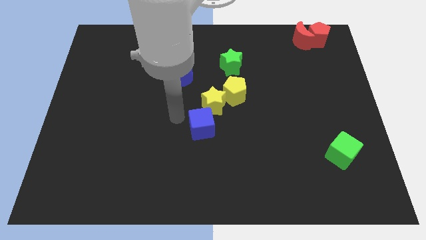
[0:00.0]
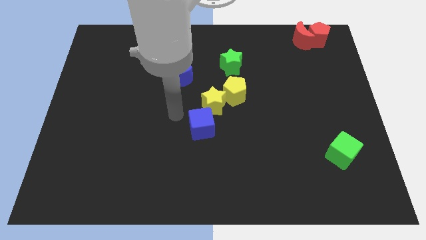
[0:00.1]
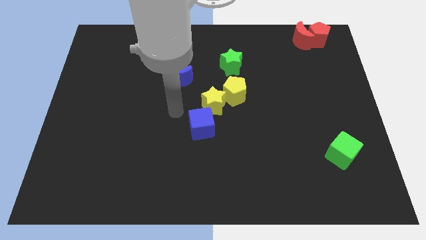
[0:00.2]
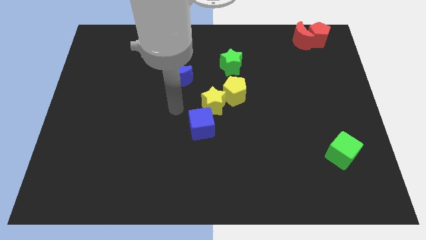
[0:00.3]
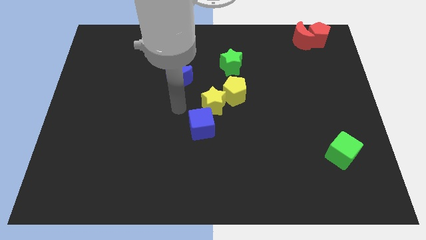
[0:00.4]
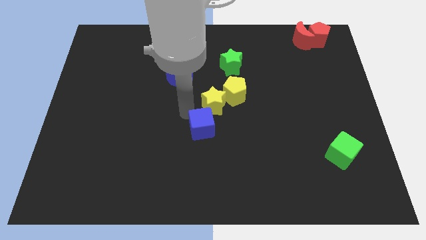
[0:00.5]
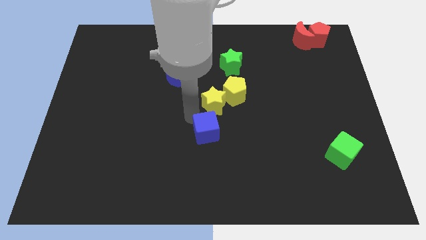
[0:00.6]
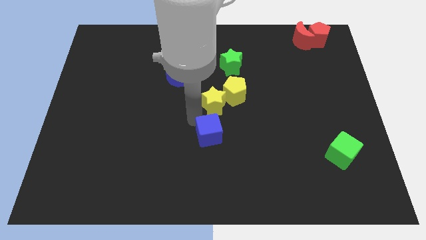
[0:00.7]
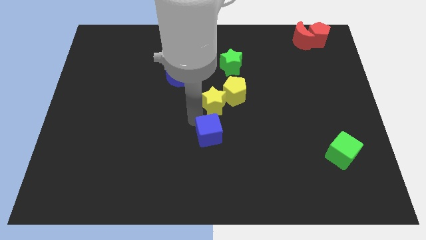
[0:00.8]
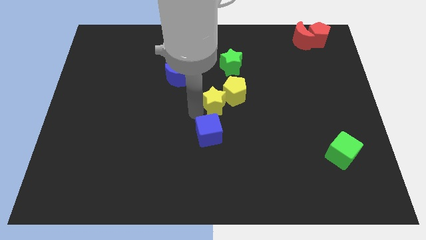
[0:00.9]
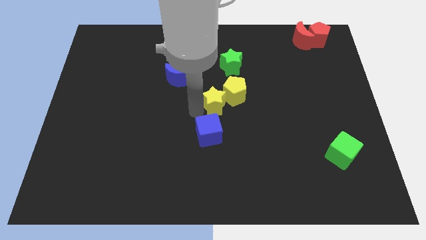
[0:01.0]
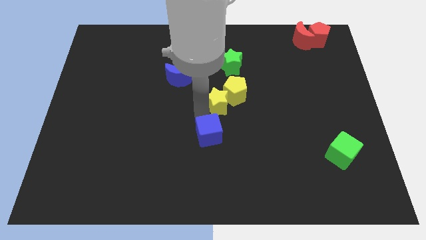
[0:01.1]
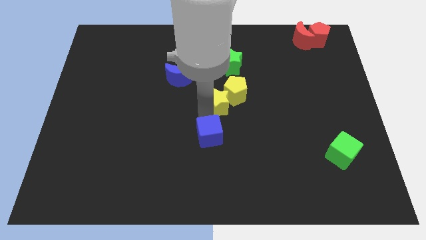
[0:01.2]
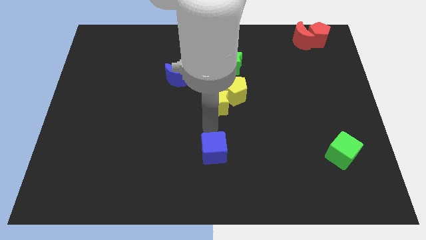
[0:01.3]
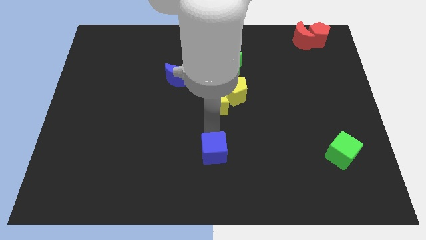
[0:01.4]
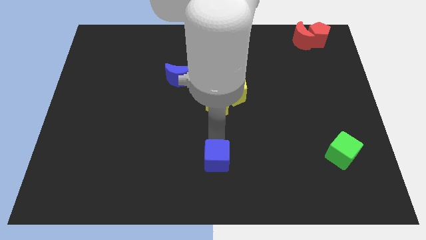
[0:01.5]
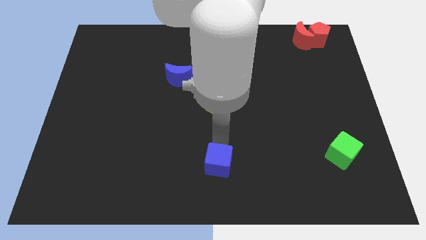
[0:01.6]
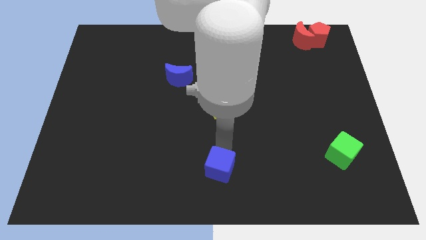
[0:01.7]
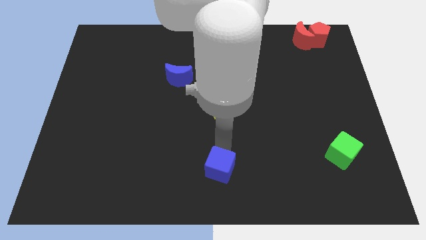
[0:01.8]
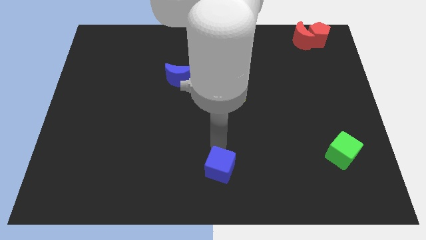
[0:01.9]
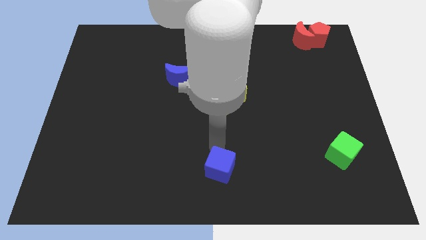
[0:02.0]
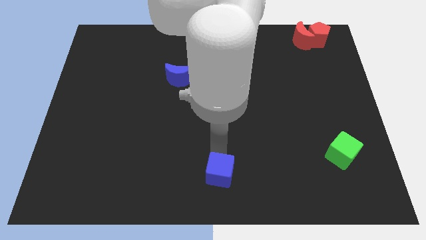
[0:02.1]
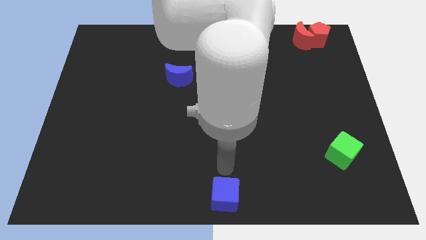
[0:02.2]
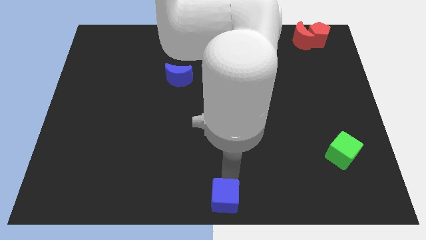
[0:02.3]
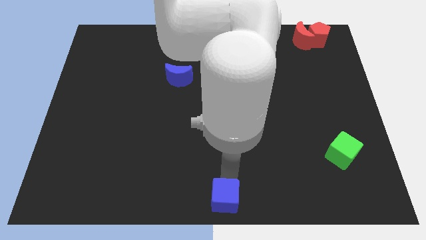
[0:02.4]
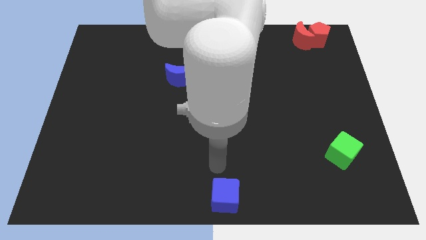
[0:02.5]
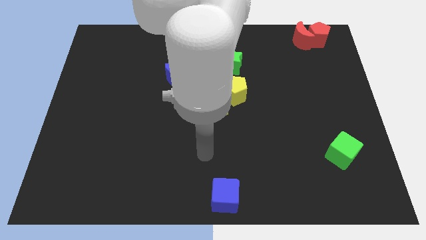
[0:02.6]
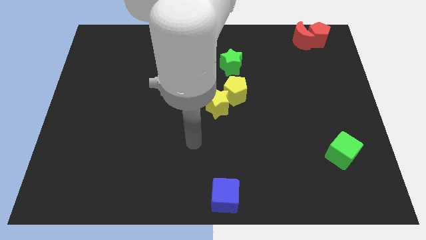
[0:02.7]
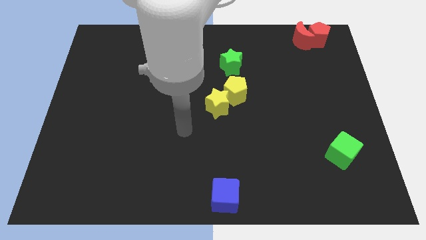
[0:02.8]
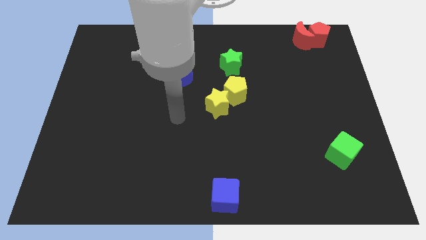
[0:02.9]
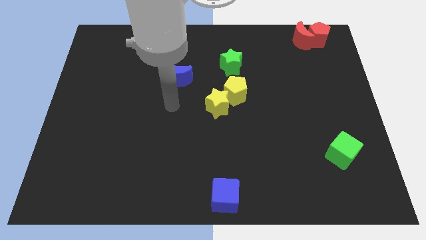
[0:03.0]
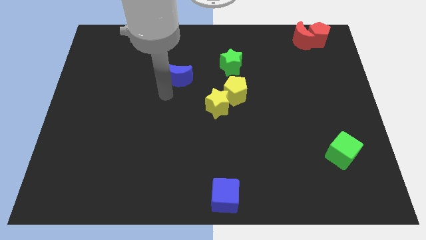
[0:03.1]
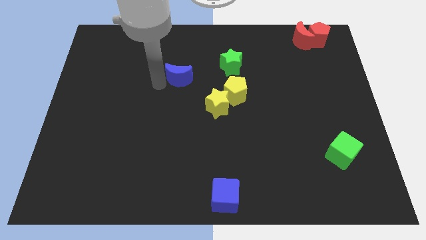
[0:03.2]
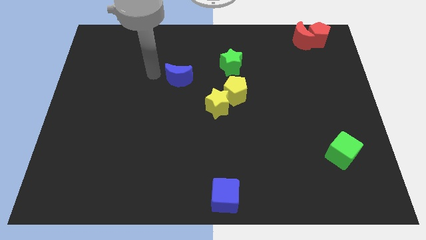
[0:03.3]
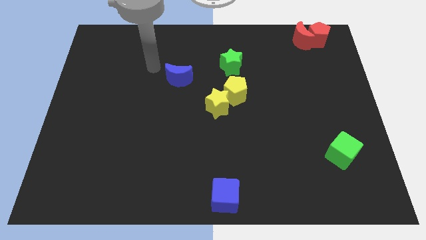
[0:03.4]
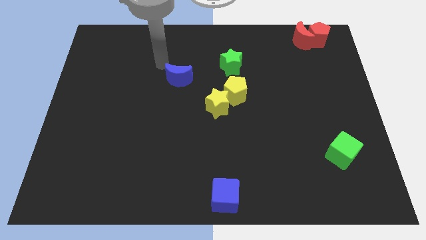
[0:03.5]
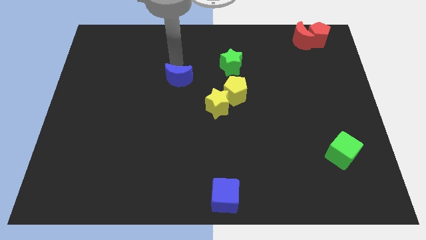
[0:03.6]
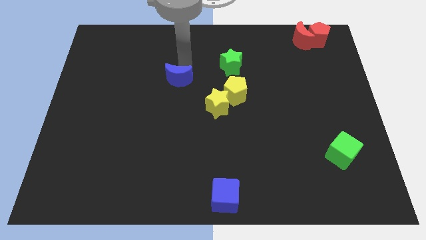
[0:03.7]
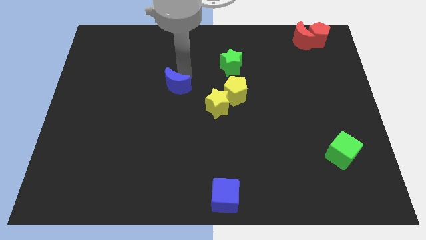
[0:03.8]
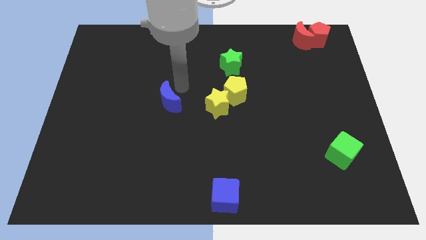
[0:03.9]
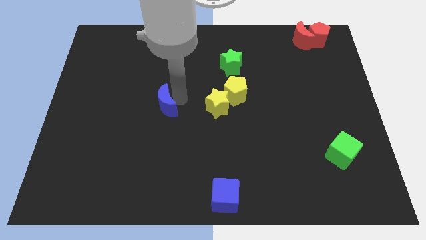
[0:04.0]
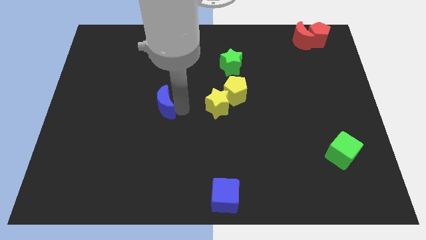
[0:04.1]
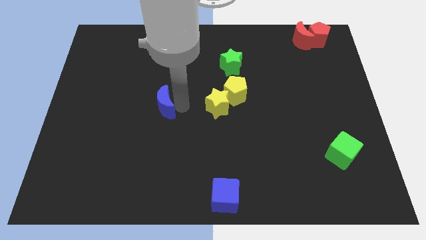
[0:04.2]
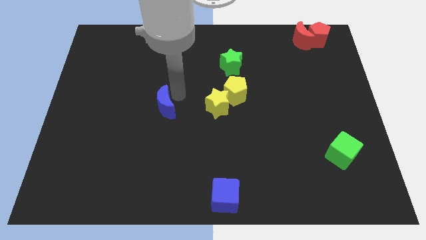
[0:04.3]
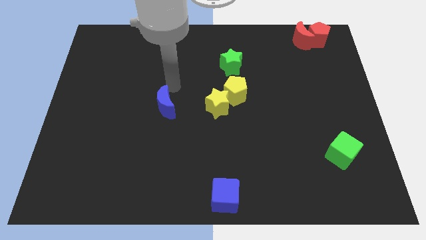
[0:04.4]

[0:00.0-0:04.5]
move blue cube to the bottom center

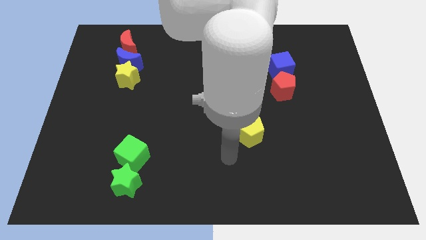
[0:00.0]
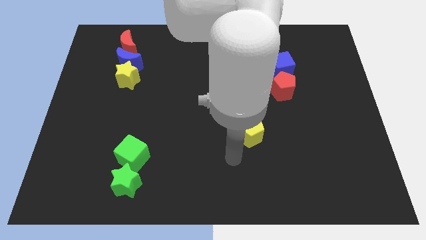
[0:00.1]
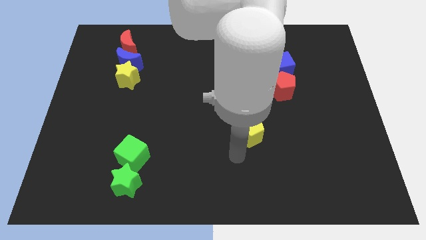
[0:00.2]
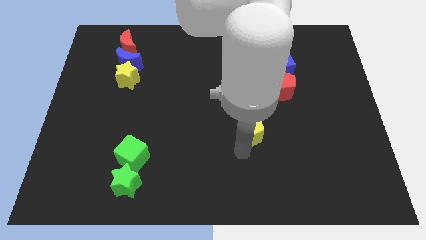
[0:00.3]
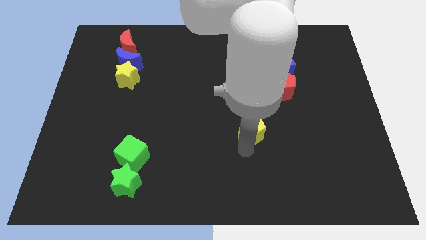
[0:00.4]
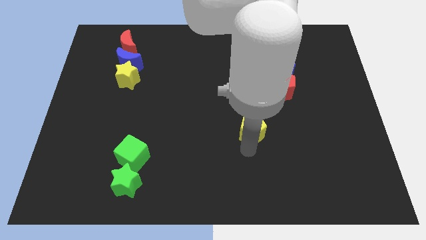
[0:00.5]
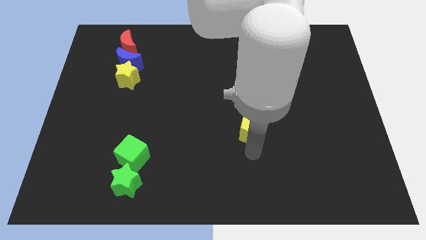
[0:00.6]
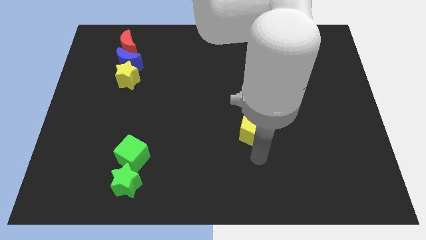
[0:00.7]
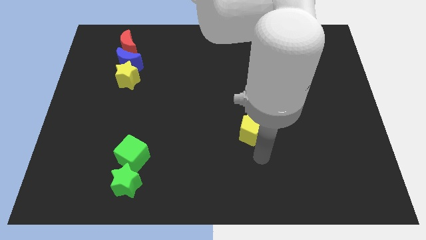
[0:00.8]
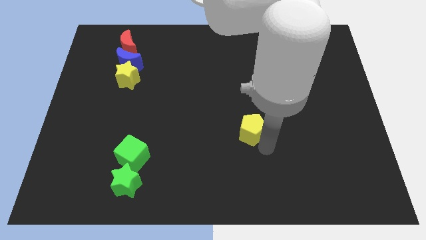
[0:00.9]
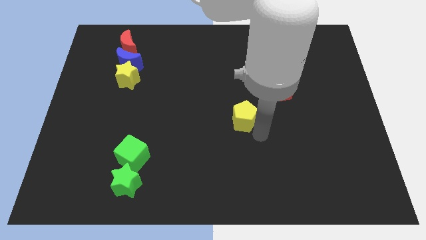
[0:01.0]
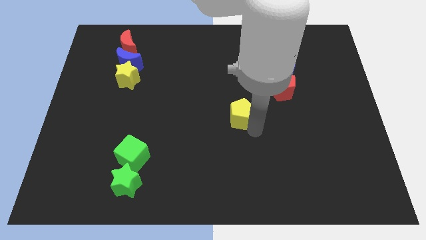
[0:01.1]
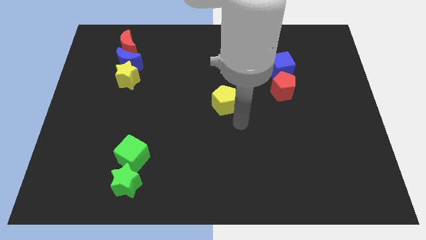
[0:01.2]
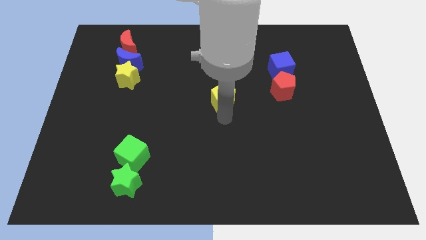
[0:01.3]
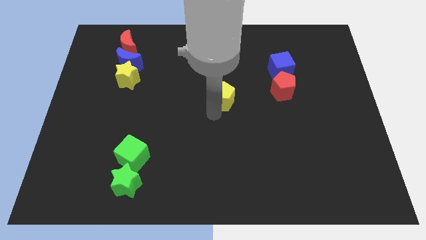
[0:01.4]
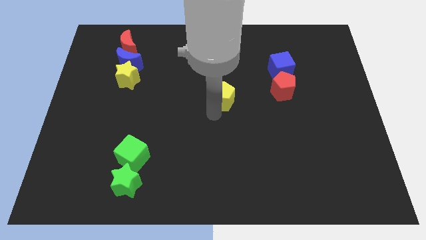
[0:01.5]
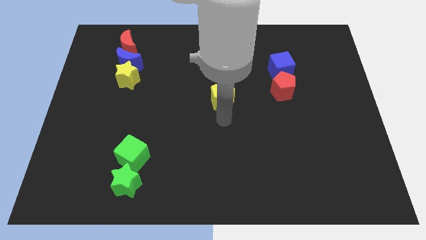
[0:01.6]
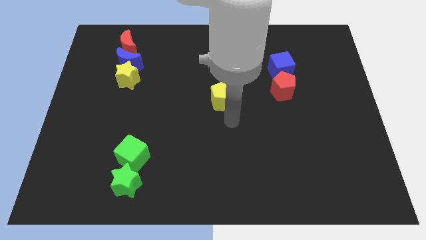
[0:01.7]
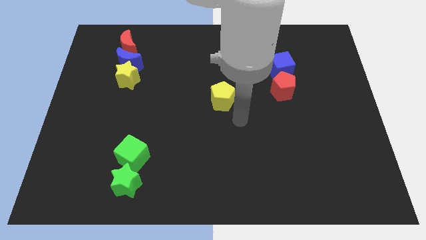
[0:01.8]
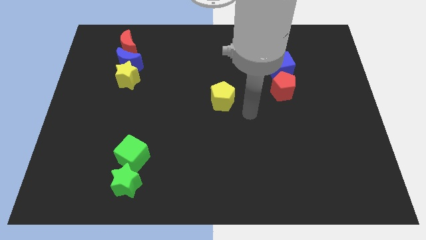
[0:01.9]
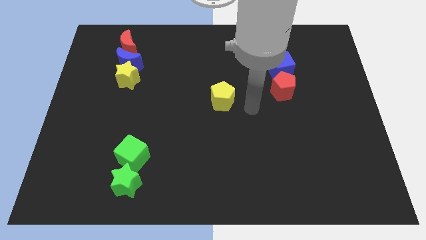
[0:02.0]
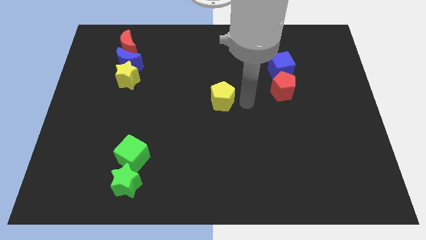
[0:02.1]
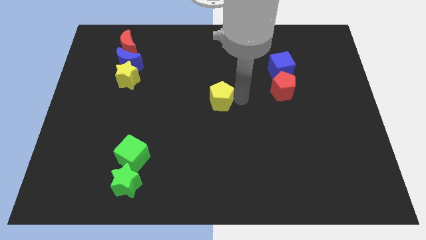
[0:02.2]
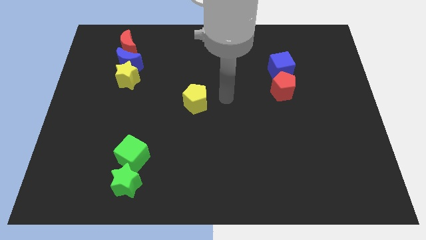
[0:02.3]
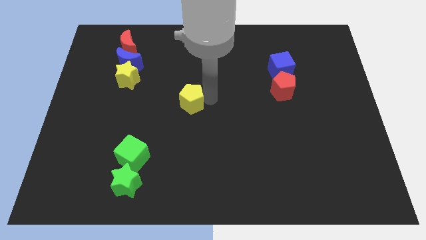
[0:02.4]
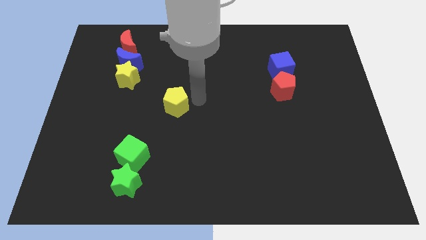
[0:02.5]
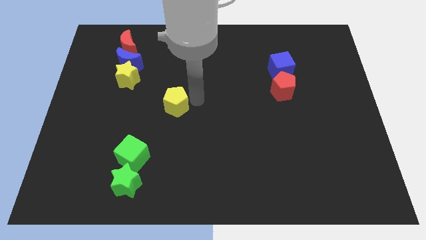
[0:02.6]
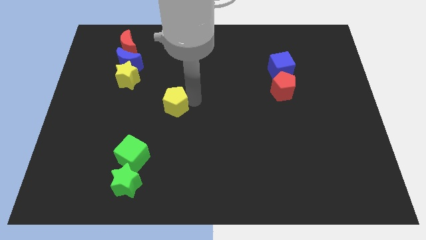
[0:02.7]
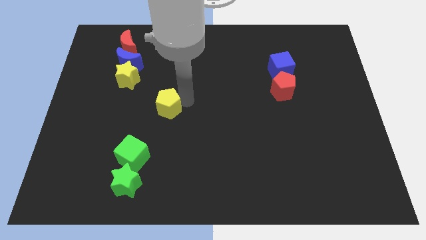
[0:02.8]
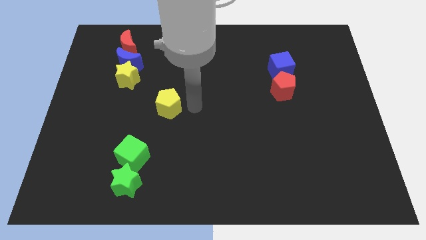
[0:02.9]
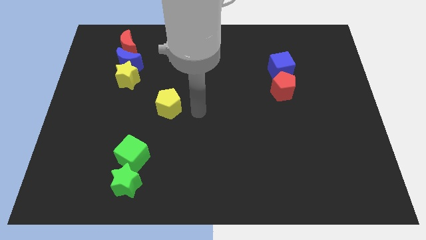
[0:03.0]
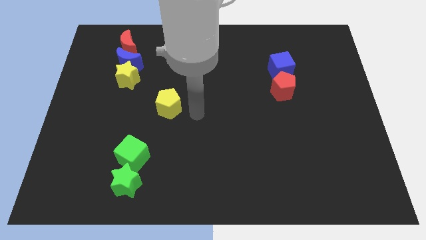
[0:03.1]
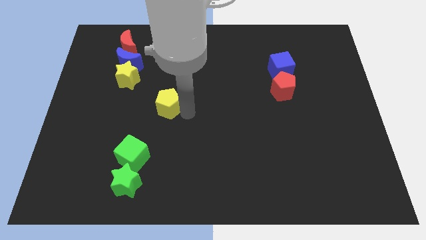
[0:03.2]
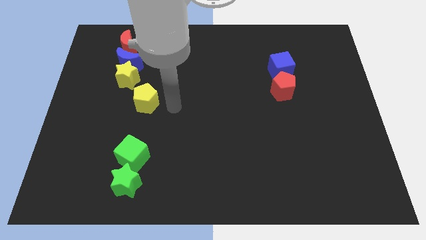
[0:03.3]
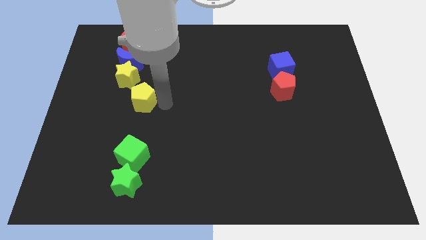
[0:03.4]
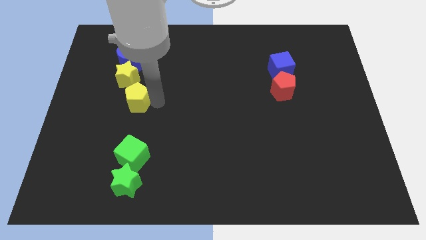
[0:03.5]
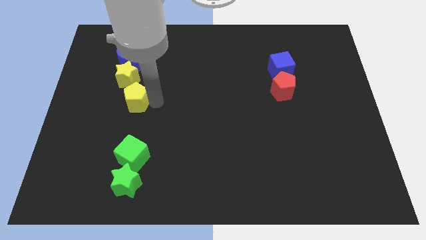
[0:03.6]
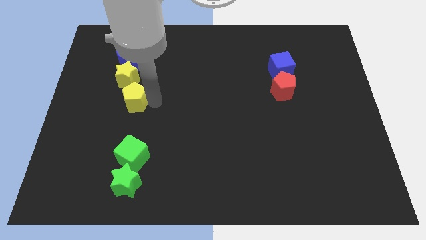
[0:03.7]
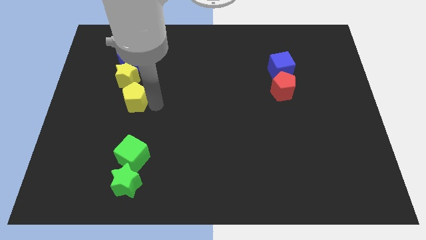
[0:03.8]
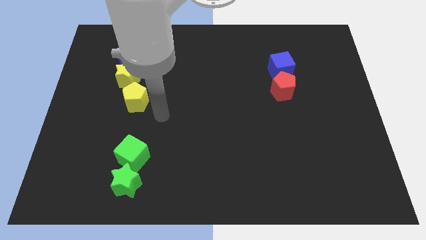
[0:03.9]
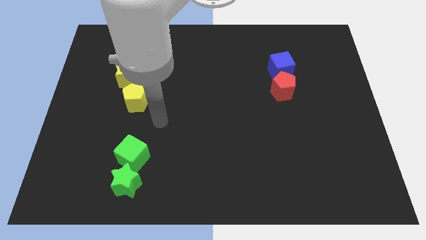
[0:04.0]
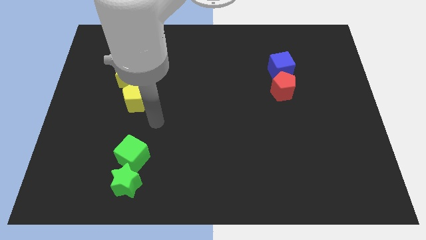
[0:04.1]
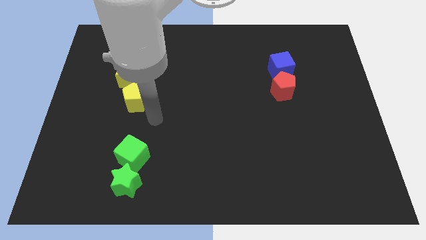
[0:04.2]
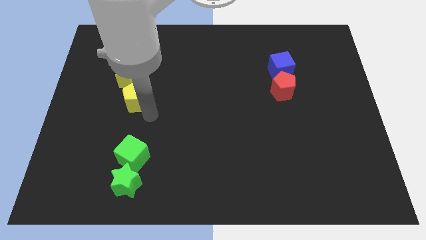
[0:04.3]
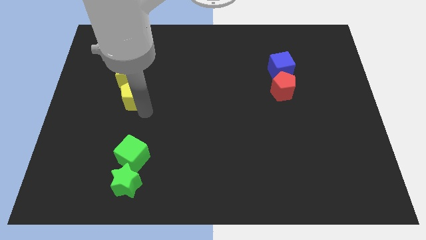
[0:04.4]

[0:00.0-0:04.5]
move the yellow pentagon below the yellow star

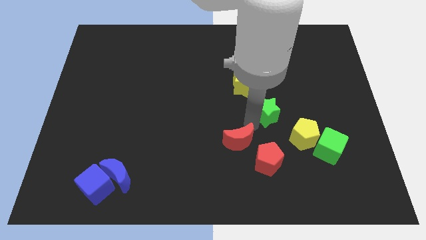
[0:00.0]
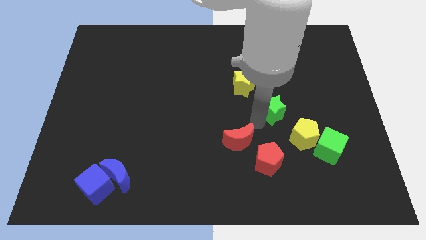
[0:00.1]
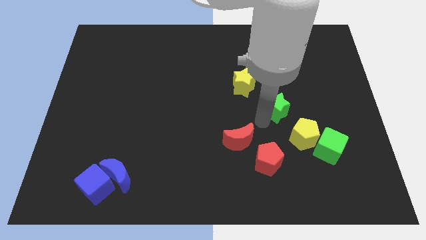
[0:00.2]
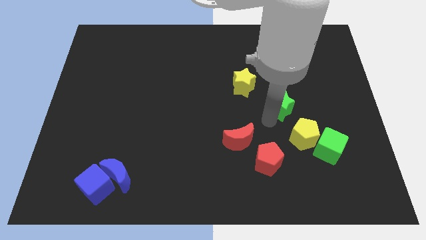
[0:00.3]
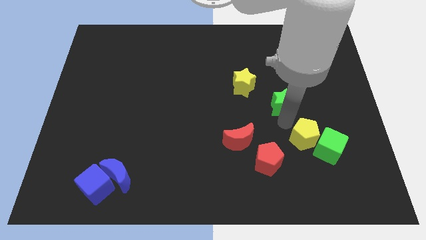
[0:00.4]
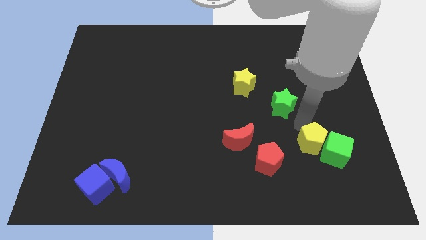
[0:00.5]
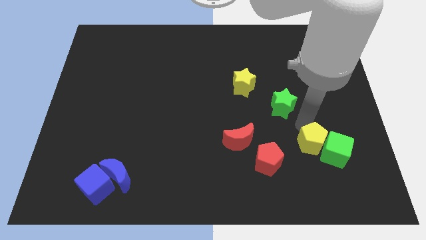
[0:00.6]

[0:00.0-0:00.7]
place the green star between the yellow star and yellow pentagon
